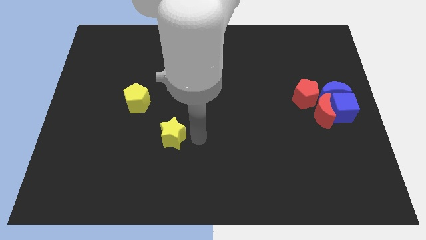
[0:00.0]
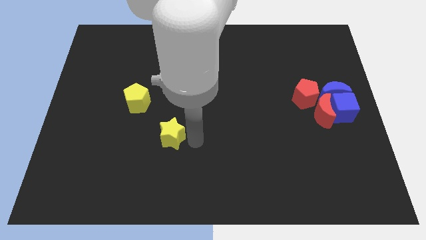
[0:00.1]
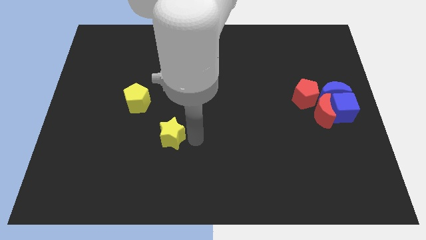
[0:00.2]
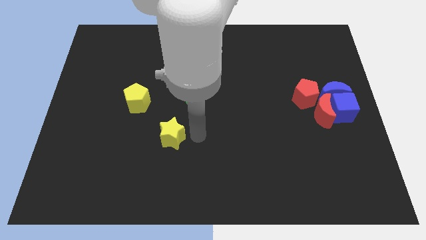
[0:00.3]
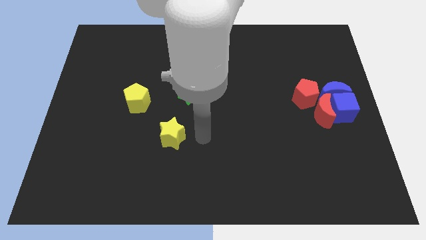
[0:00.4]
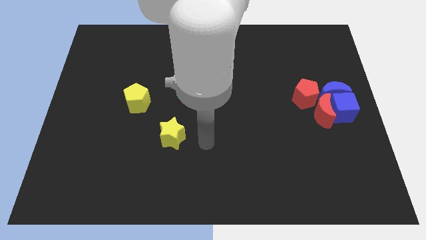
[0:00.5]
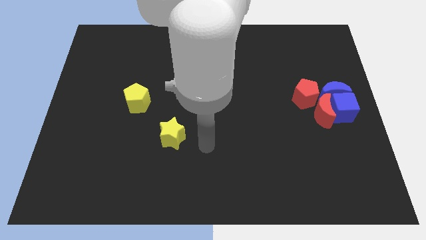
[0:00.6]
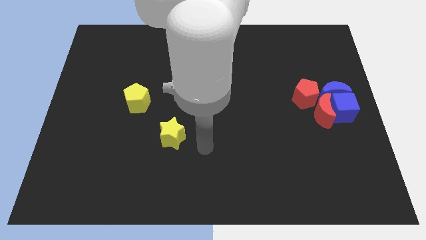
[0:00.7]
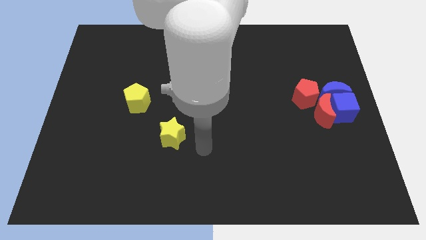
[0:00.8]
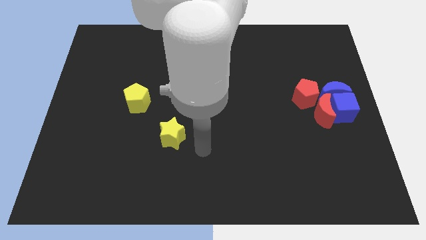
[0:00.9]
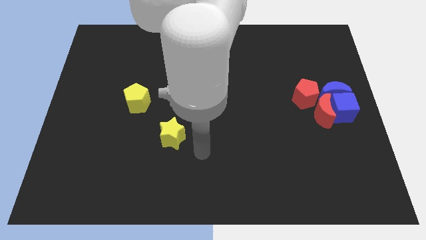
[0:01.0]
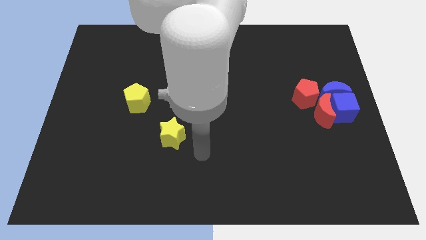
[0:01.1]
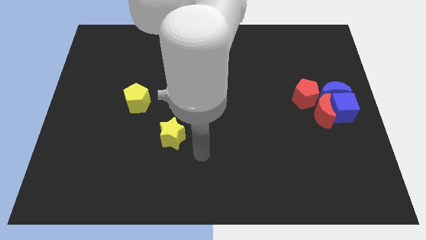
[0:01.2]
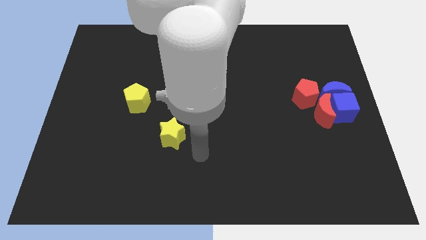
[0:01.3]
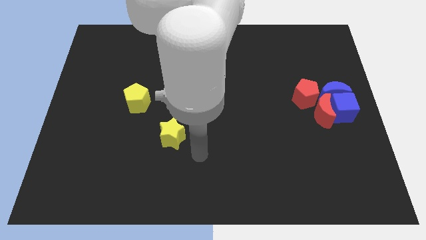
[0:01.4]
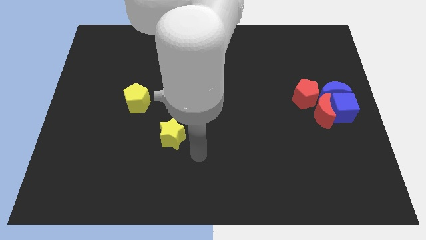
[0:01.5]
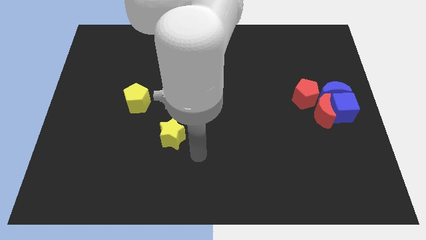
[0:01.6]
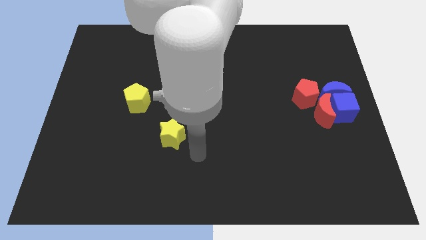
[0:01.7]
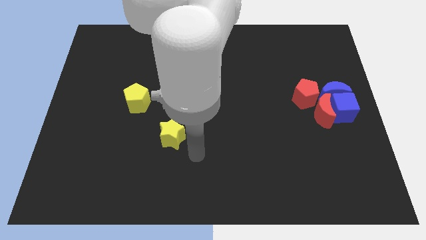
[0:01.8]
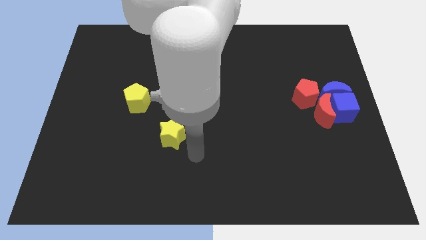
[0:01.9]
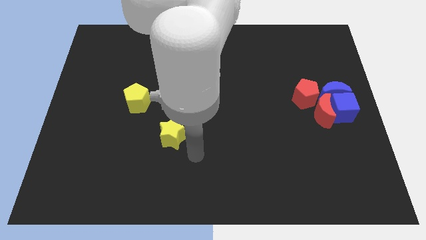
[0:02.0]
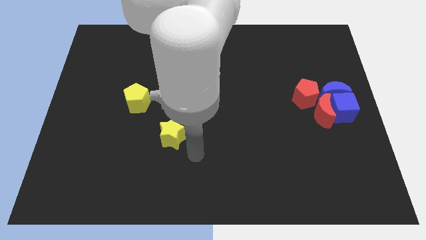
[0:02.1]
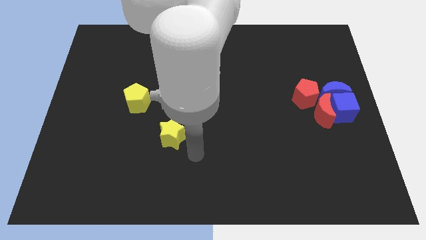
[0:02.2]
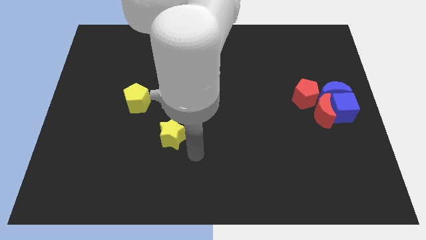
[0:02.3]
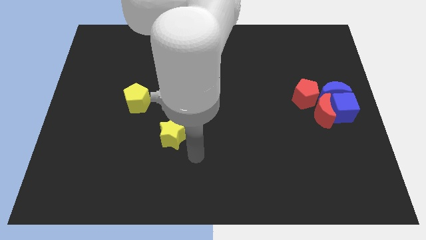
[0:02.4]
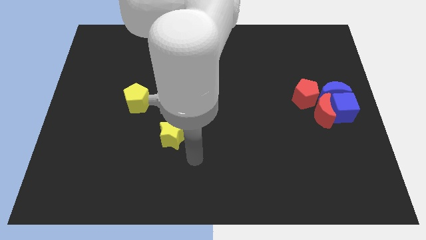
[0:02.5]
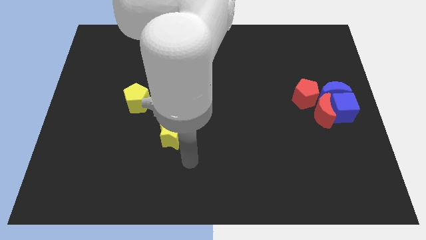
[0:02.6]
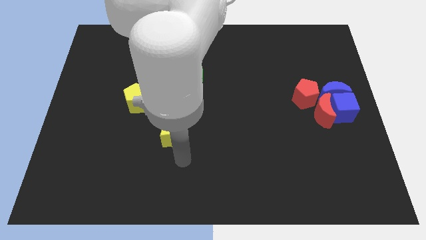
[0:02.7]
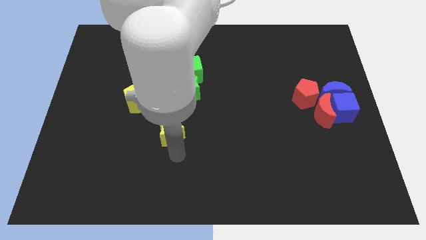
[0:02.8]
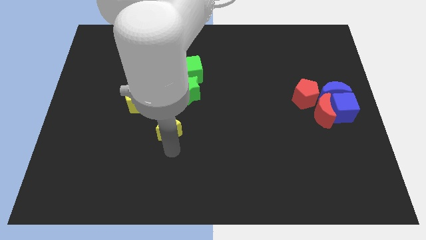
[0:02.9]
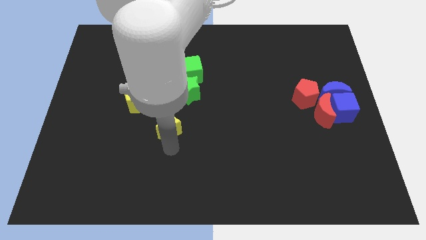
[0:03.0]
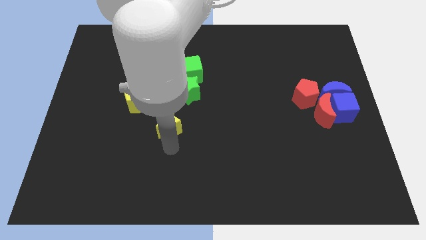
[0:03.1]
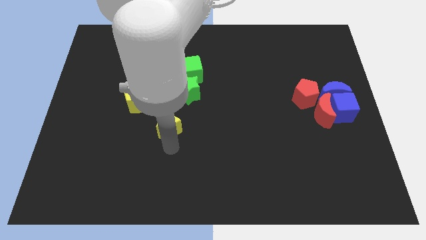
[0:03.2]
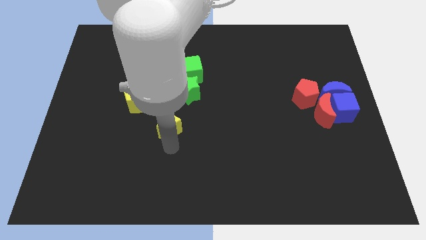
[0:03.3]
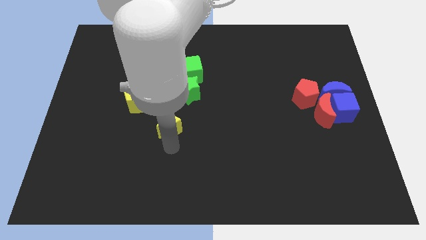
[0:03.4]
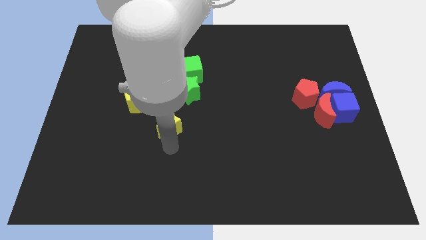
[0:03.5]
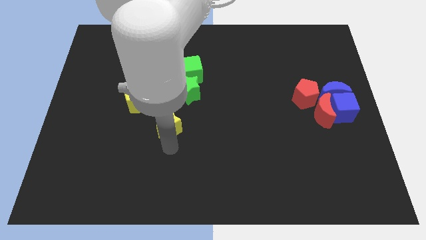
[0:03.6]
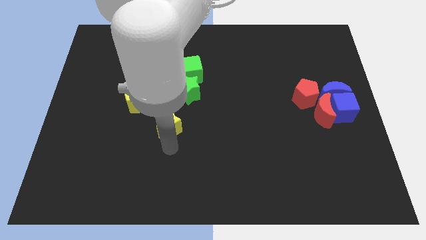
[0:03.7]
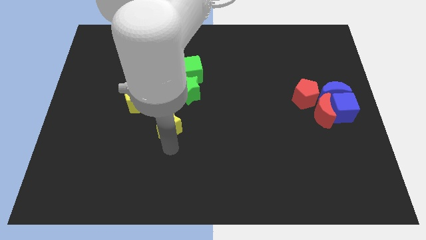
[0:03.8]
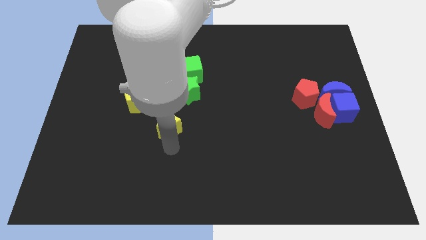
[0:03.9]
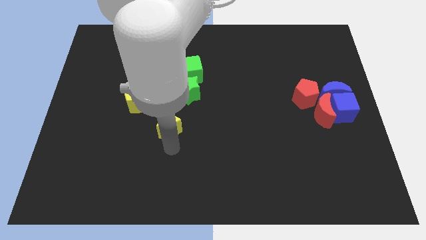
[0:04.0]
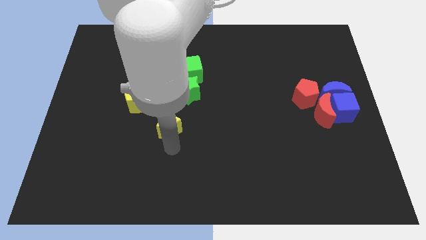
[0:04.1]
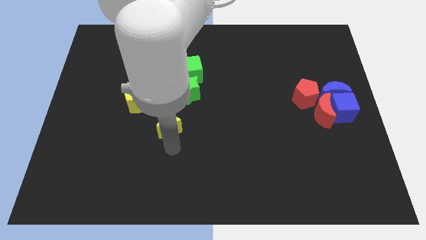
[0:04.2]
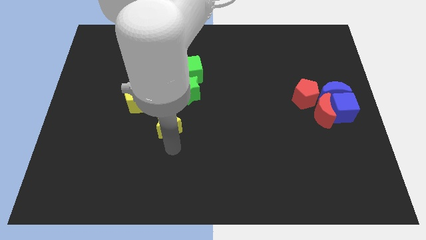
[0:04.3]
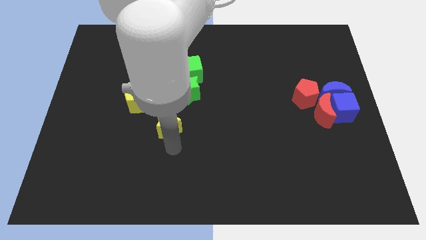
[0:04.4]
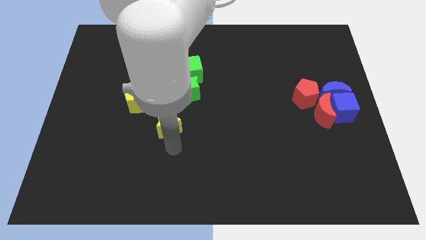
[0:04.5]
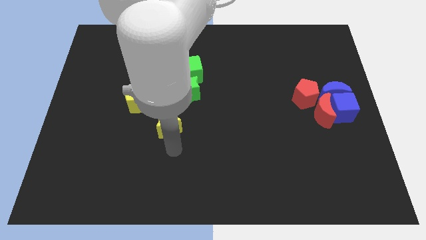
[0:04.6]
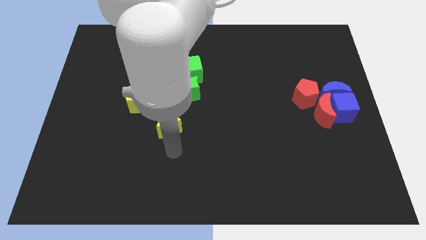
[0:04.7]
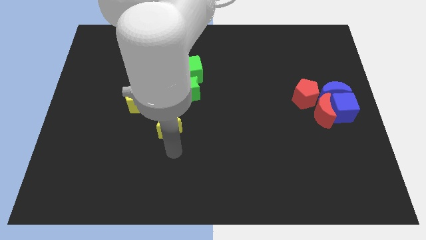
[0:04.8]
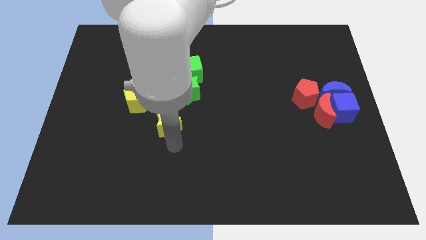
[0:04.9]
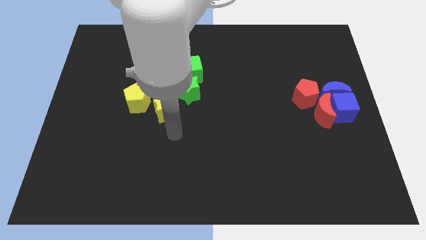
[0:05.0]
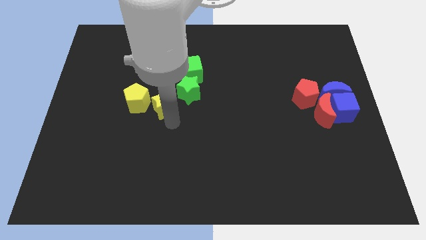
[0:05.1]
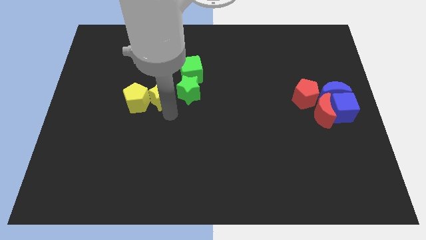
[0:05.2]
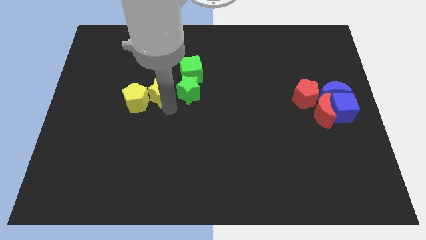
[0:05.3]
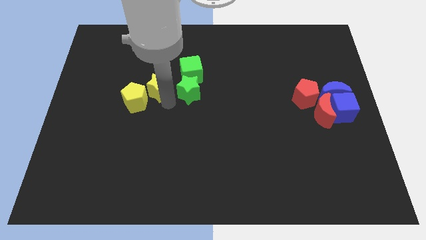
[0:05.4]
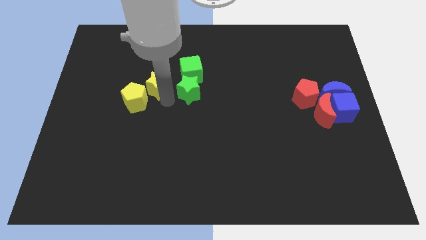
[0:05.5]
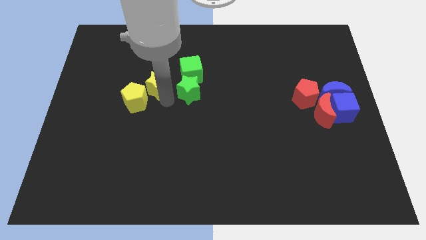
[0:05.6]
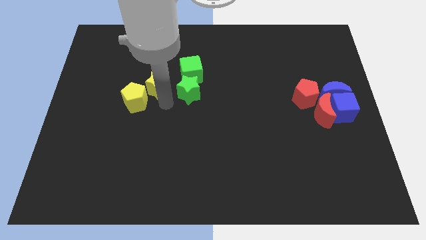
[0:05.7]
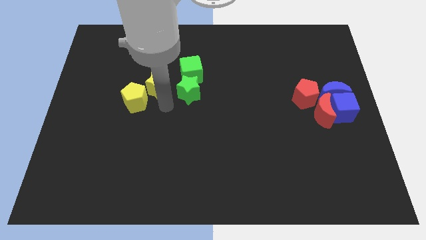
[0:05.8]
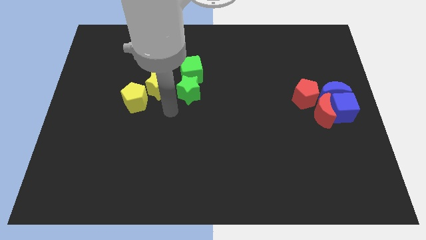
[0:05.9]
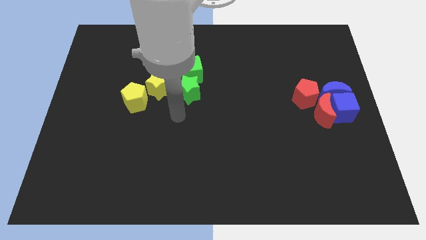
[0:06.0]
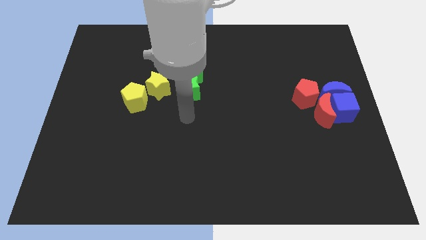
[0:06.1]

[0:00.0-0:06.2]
move the yellow star left to the green star

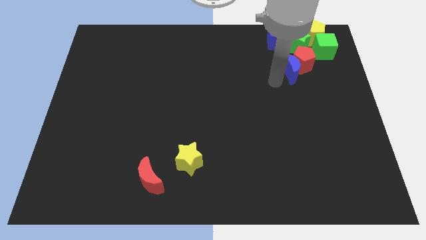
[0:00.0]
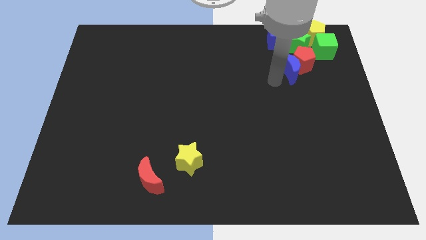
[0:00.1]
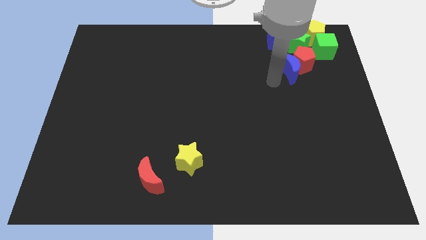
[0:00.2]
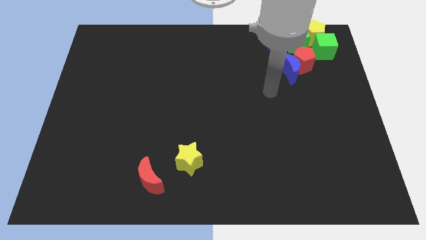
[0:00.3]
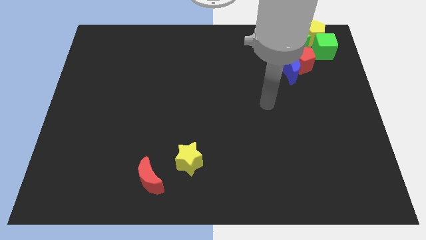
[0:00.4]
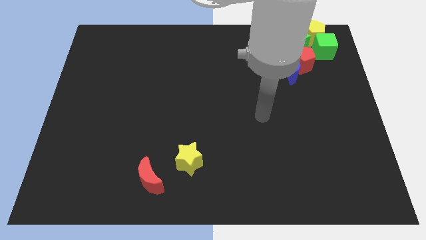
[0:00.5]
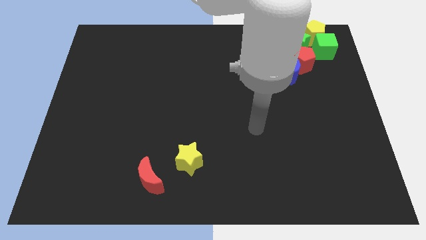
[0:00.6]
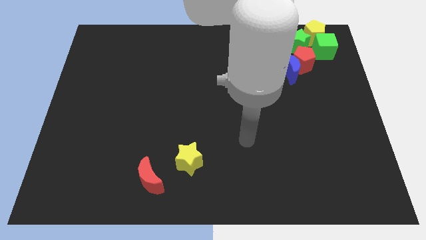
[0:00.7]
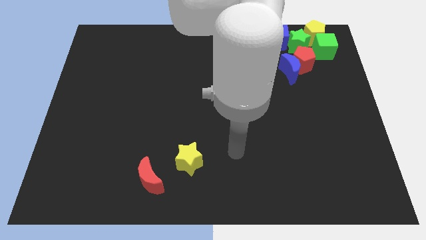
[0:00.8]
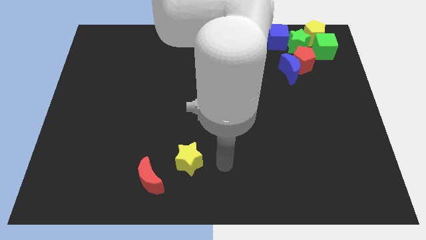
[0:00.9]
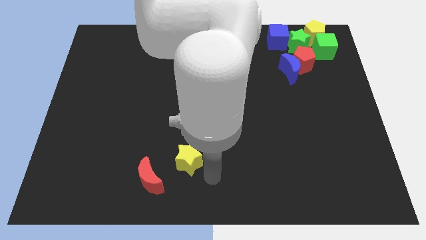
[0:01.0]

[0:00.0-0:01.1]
move your hand towards the yellow star

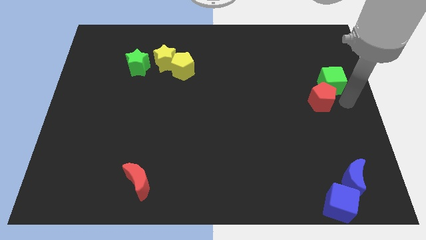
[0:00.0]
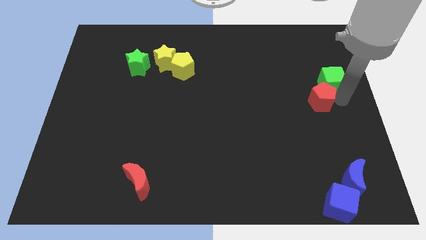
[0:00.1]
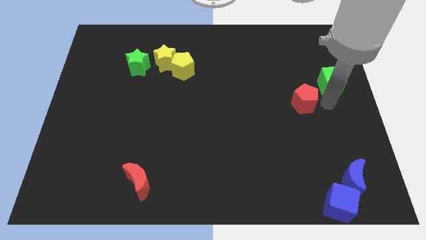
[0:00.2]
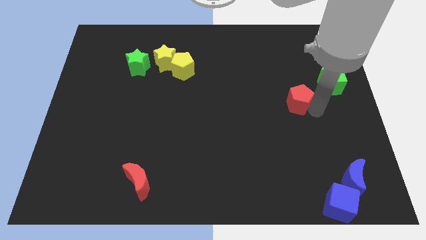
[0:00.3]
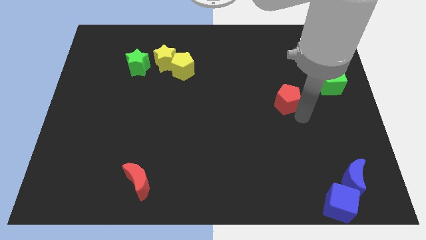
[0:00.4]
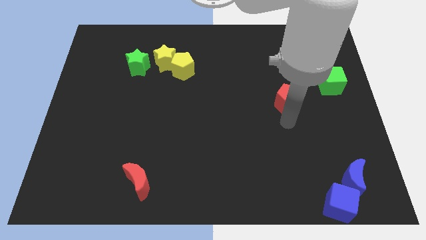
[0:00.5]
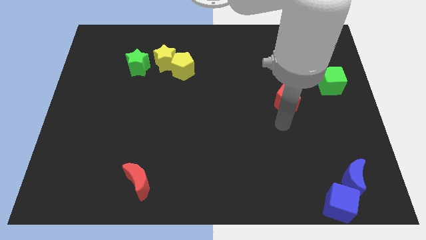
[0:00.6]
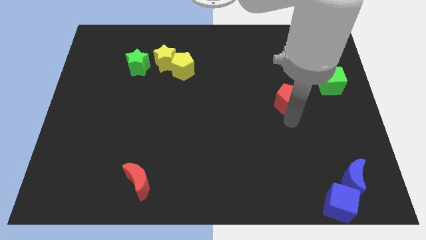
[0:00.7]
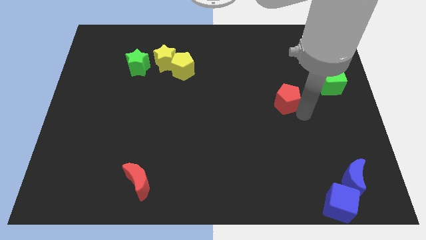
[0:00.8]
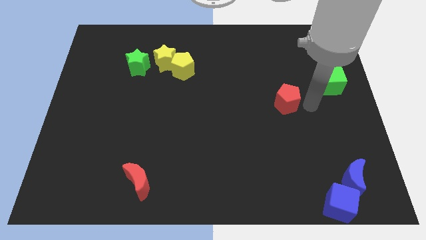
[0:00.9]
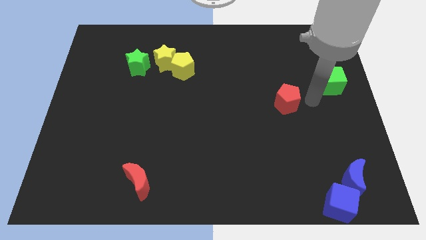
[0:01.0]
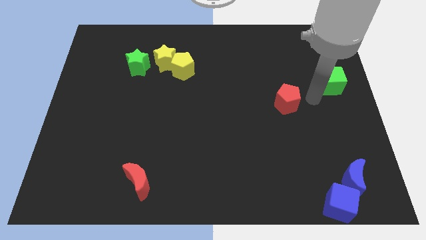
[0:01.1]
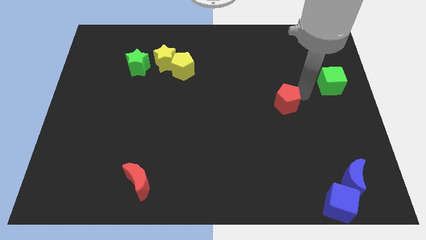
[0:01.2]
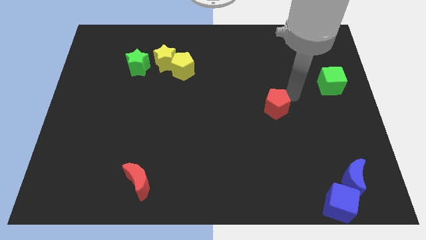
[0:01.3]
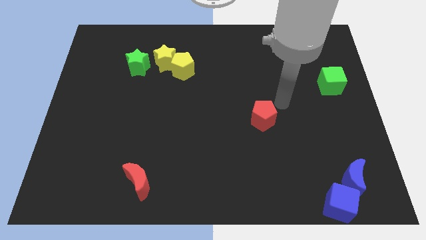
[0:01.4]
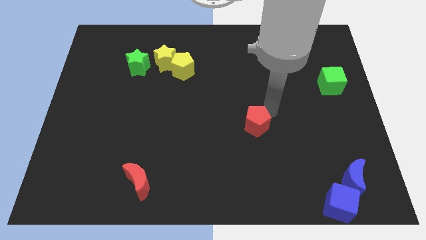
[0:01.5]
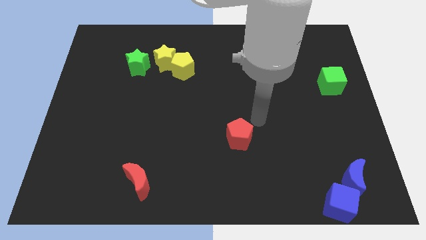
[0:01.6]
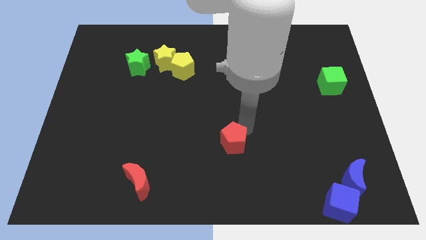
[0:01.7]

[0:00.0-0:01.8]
move the red pentagon towards the center of the board
